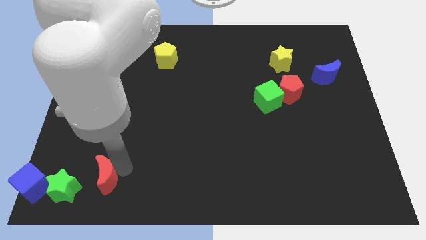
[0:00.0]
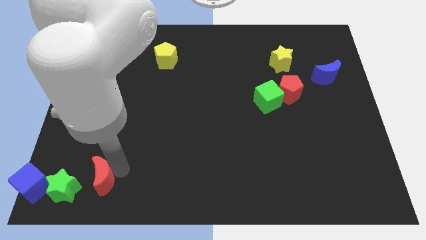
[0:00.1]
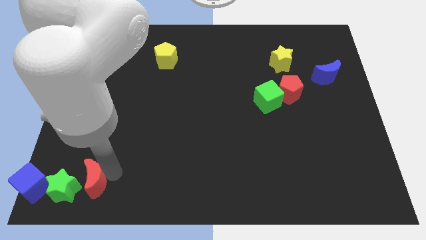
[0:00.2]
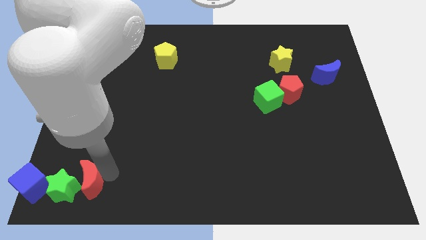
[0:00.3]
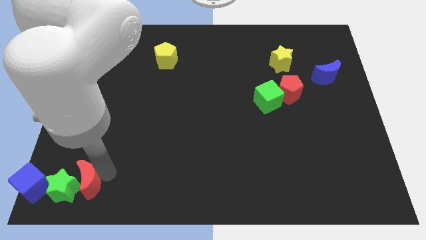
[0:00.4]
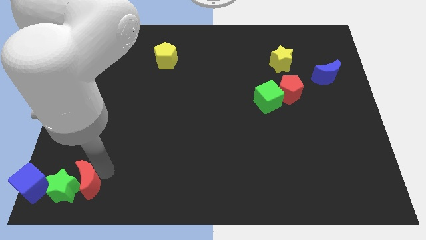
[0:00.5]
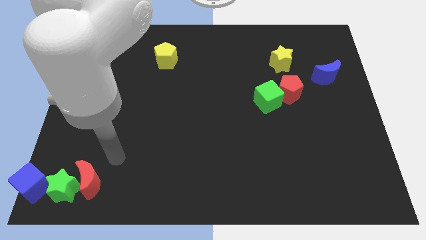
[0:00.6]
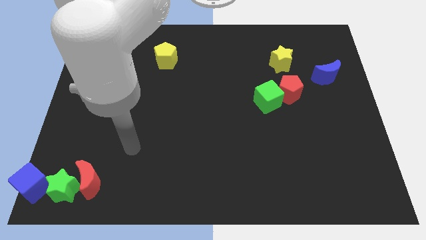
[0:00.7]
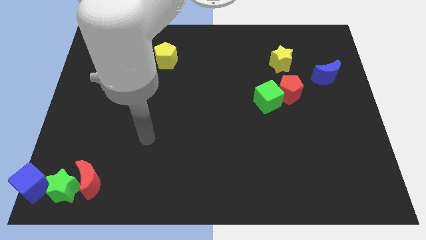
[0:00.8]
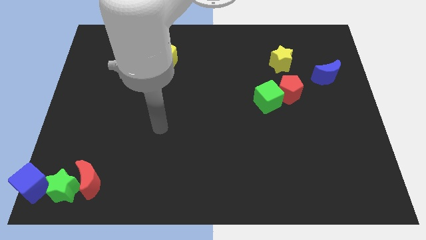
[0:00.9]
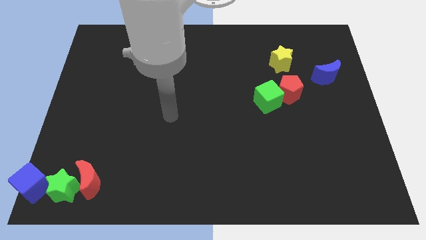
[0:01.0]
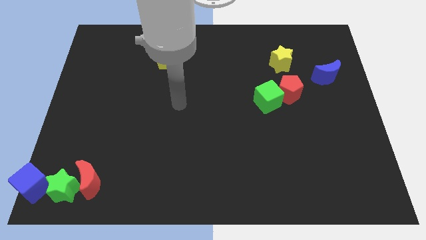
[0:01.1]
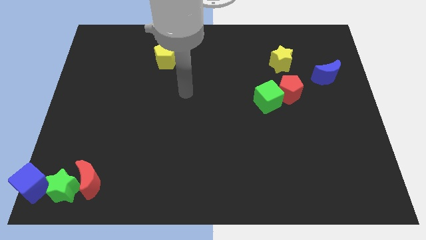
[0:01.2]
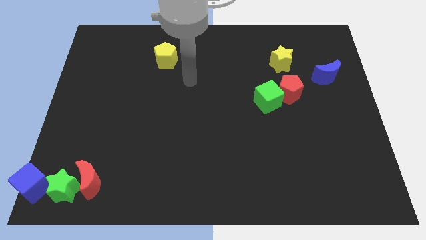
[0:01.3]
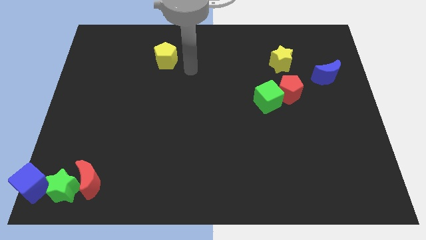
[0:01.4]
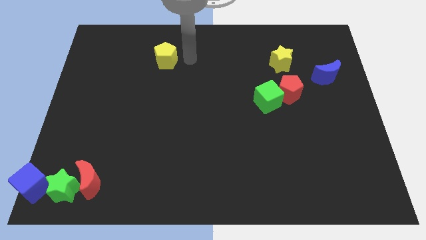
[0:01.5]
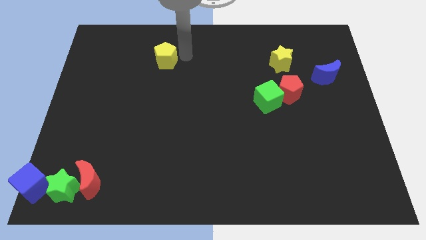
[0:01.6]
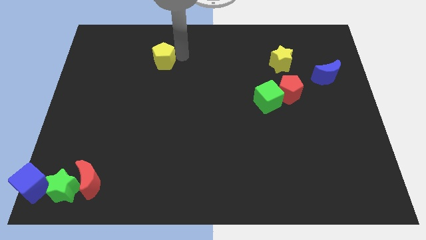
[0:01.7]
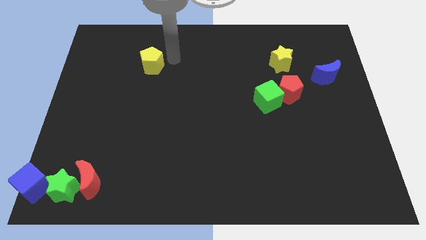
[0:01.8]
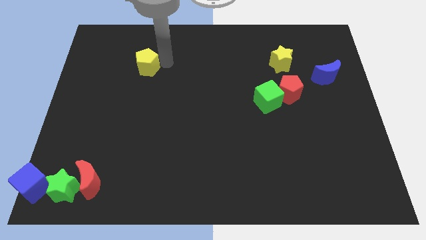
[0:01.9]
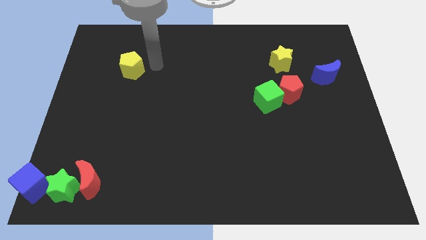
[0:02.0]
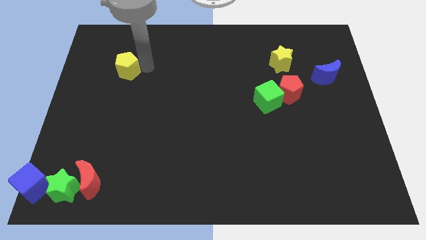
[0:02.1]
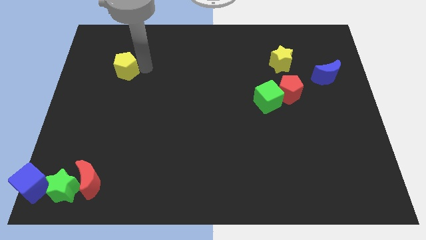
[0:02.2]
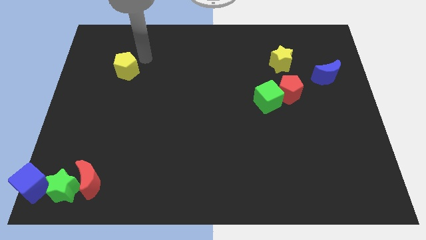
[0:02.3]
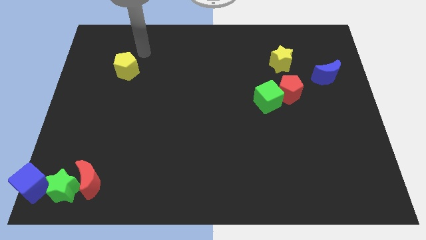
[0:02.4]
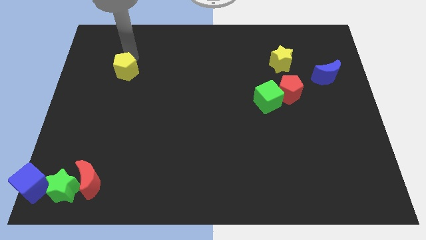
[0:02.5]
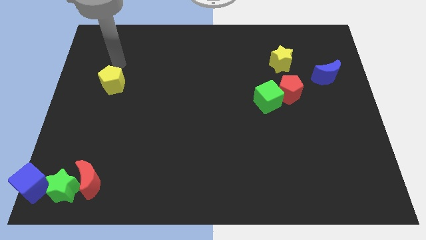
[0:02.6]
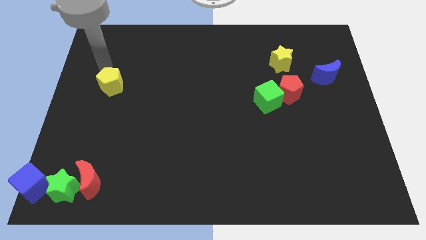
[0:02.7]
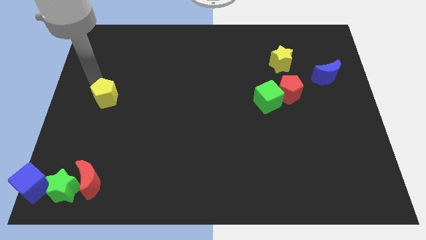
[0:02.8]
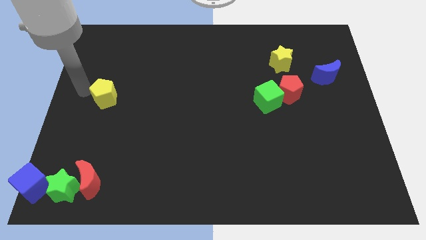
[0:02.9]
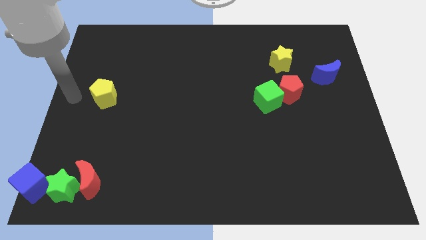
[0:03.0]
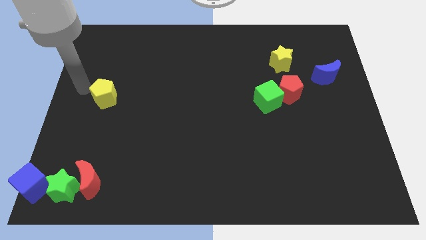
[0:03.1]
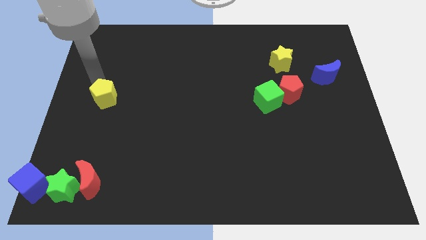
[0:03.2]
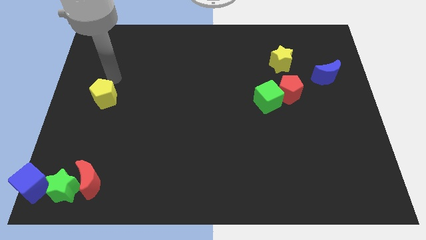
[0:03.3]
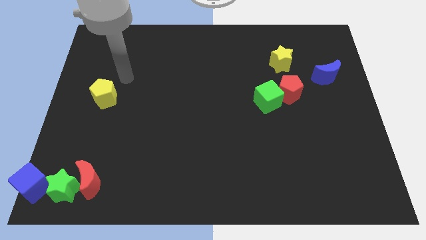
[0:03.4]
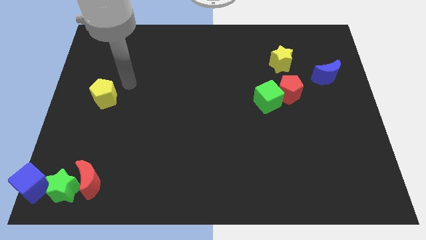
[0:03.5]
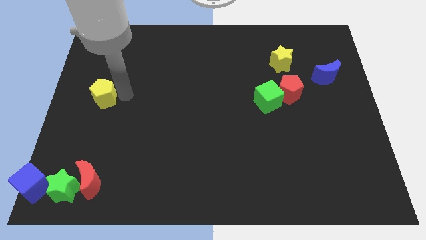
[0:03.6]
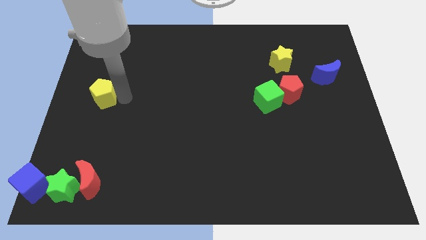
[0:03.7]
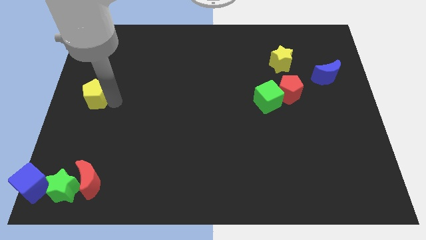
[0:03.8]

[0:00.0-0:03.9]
move the yellow pentagon towards the center left of the board

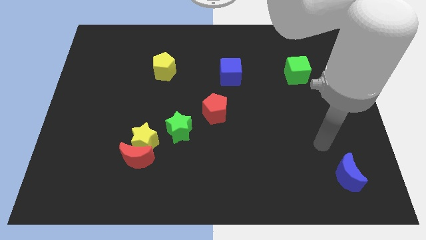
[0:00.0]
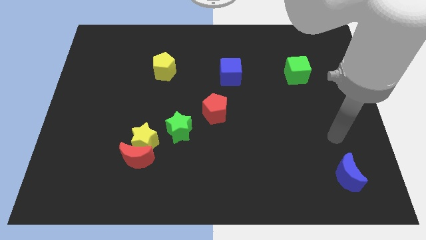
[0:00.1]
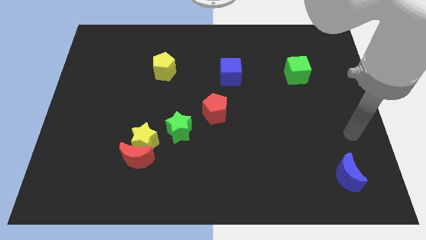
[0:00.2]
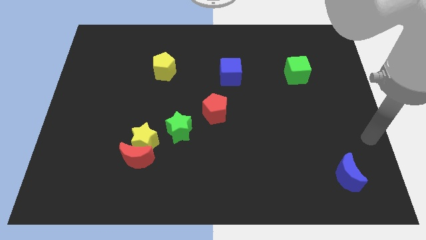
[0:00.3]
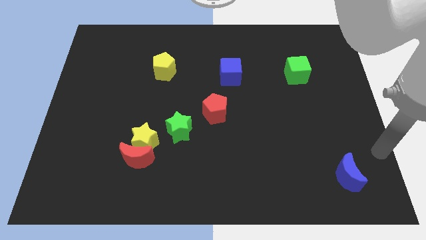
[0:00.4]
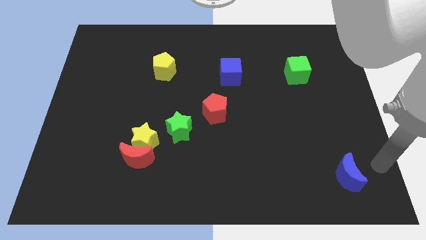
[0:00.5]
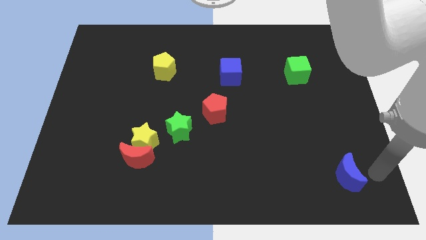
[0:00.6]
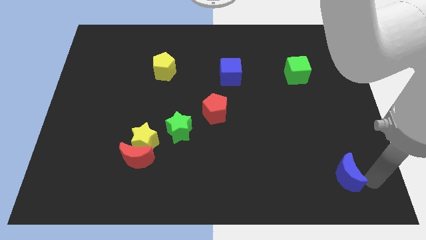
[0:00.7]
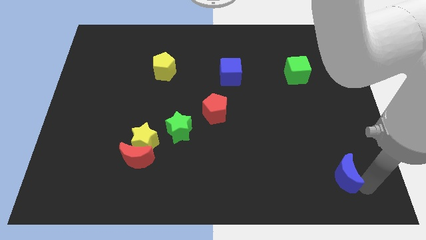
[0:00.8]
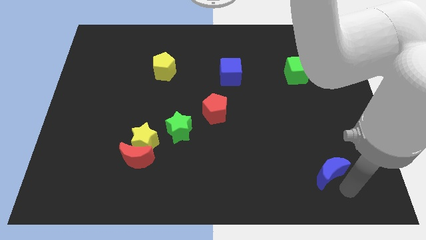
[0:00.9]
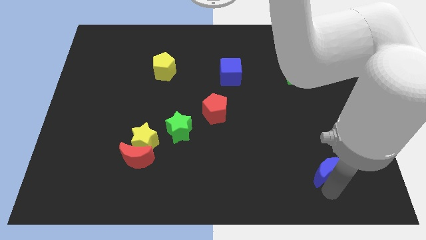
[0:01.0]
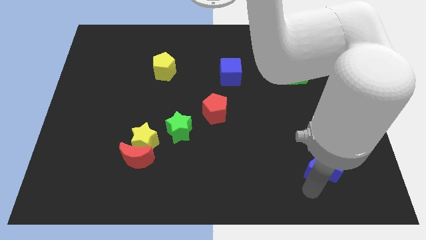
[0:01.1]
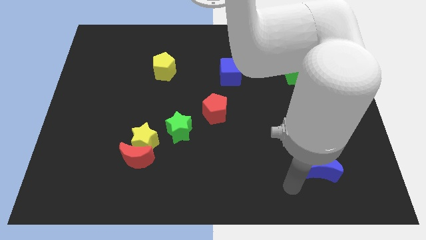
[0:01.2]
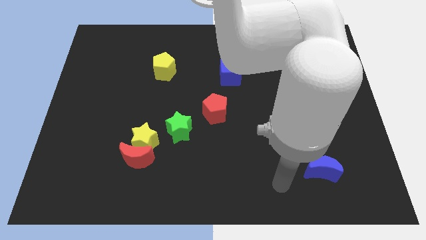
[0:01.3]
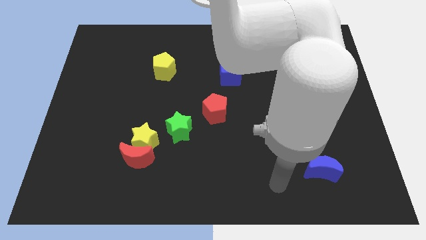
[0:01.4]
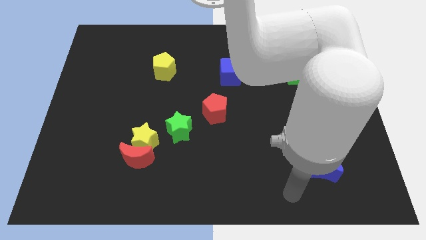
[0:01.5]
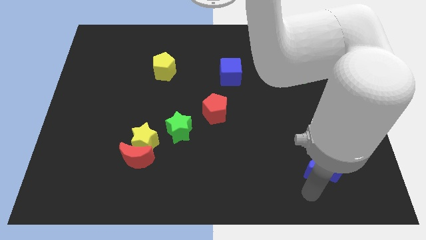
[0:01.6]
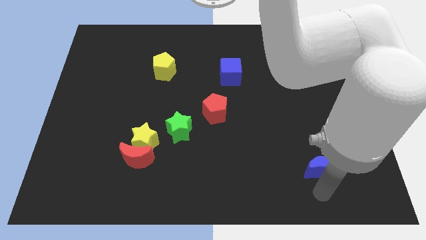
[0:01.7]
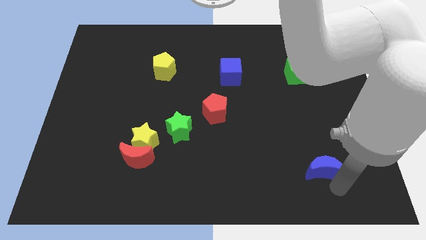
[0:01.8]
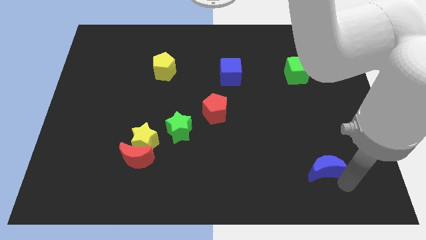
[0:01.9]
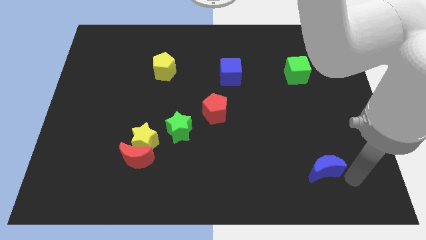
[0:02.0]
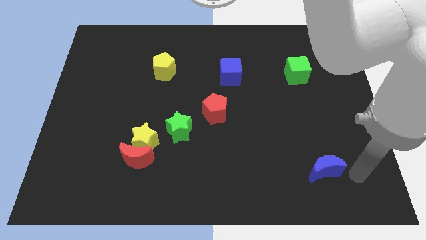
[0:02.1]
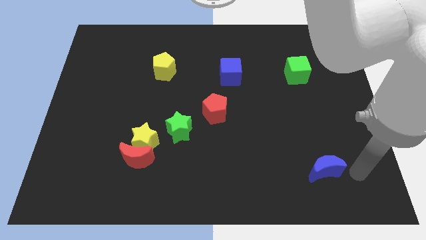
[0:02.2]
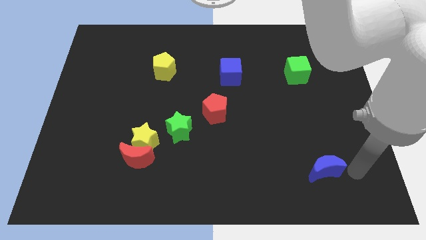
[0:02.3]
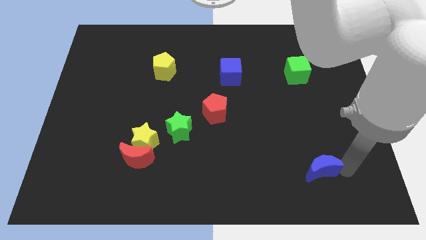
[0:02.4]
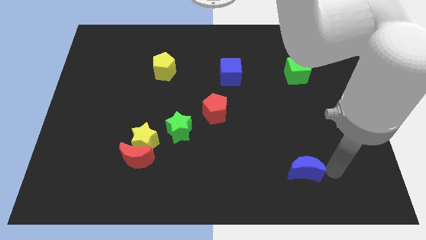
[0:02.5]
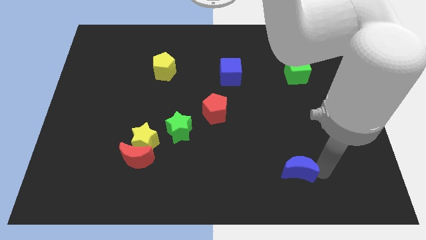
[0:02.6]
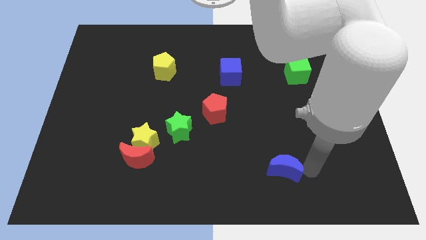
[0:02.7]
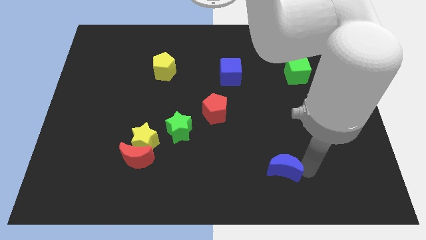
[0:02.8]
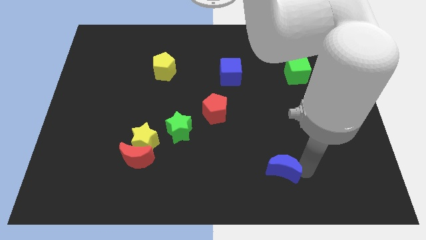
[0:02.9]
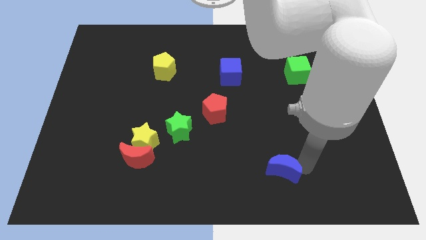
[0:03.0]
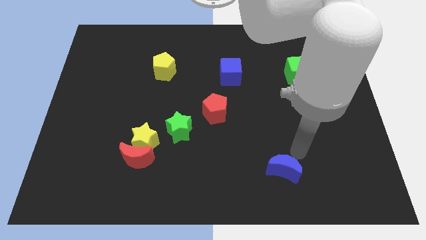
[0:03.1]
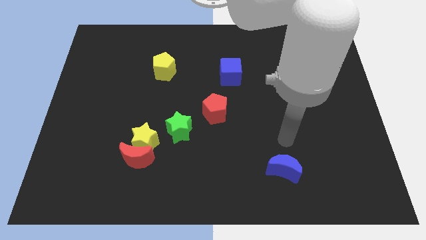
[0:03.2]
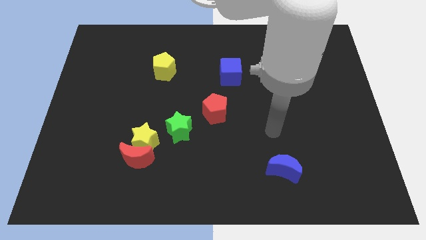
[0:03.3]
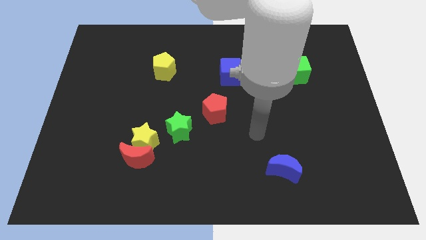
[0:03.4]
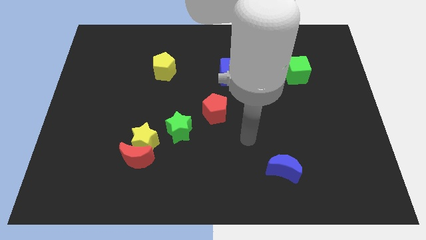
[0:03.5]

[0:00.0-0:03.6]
move the blue crescent towards the bottom center

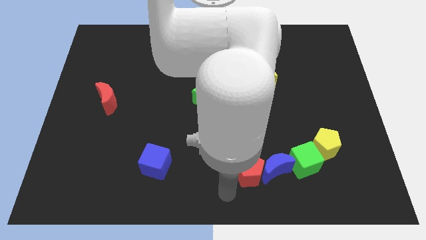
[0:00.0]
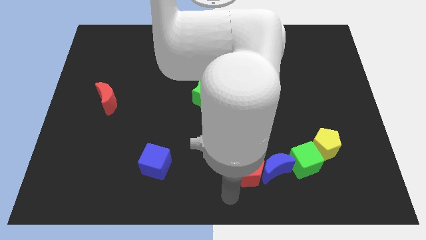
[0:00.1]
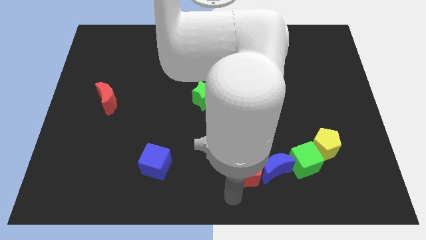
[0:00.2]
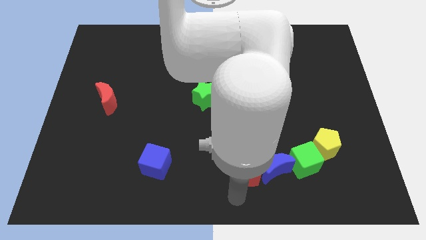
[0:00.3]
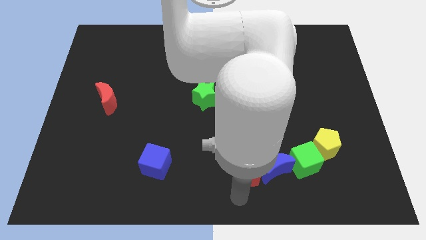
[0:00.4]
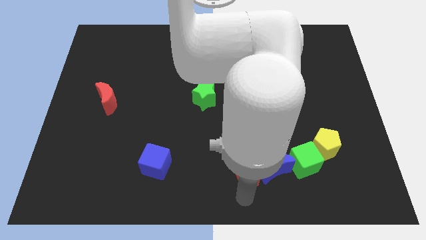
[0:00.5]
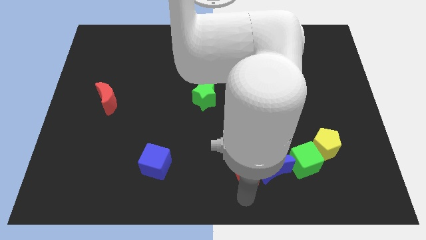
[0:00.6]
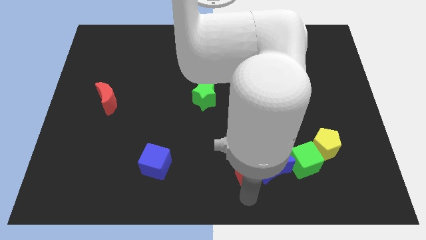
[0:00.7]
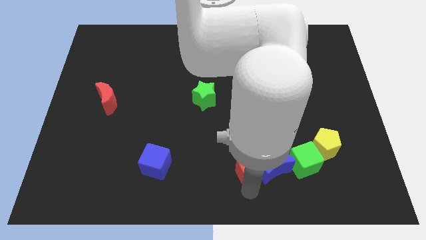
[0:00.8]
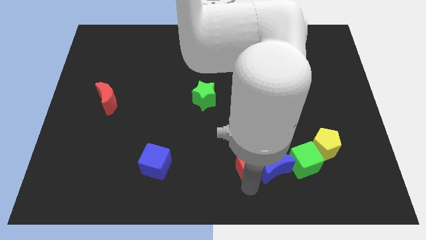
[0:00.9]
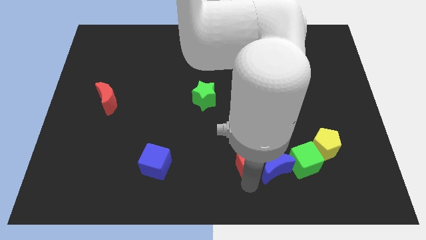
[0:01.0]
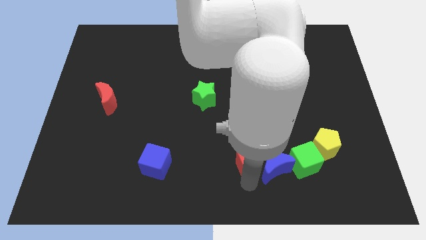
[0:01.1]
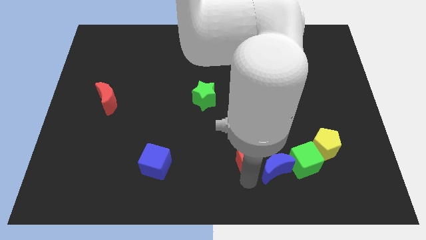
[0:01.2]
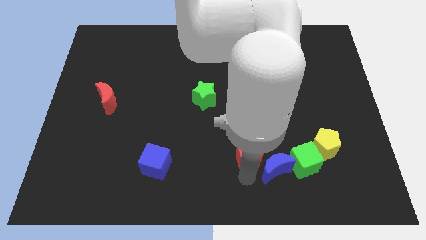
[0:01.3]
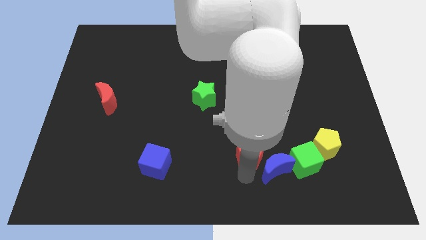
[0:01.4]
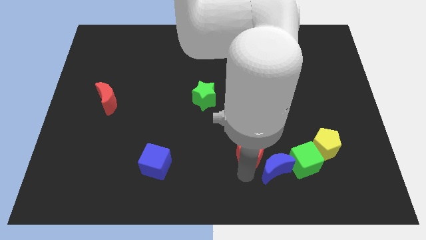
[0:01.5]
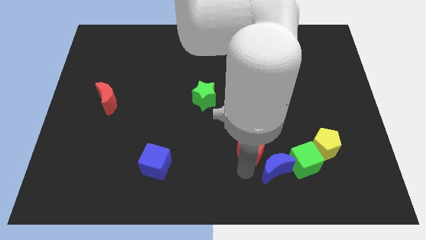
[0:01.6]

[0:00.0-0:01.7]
move the red pentagon to the top of the board
